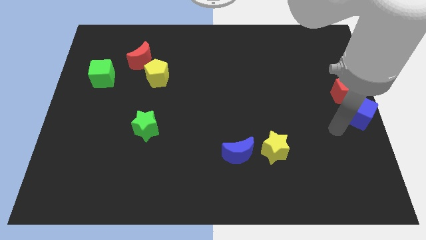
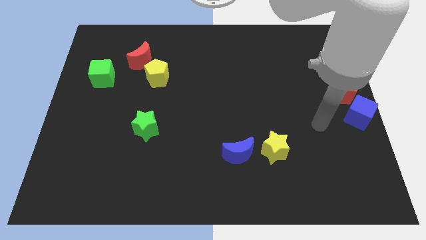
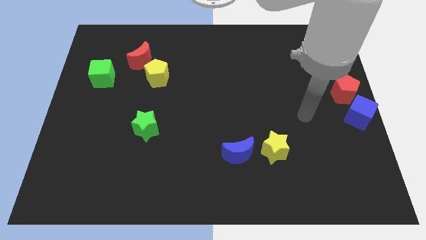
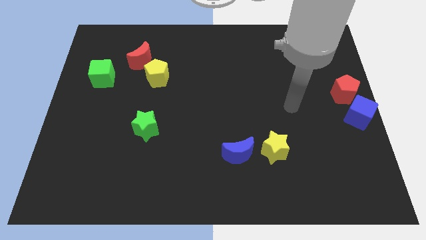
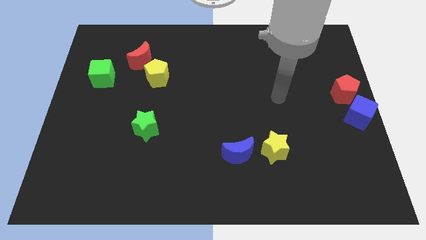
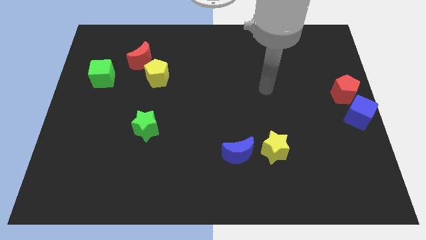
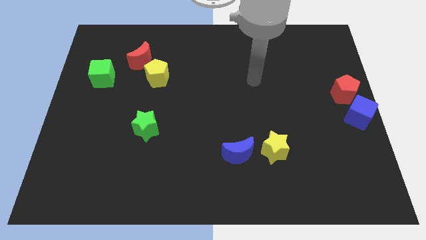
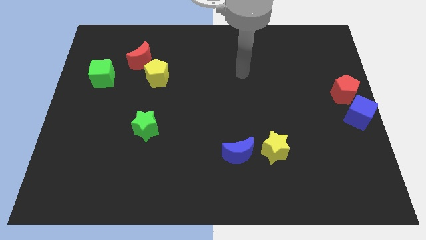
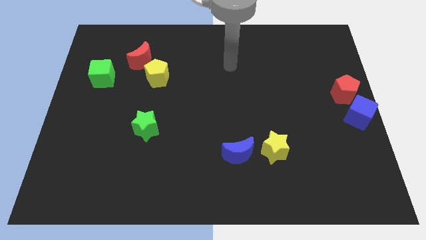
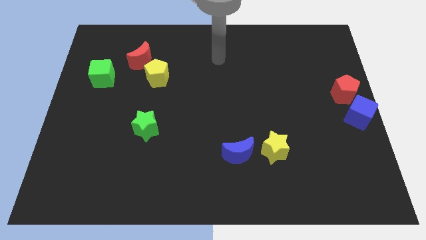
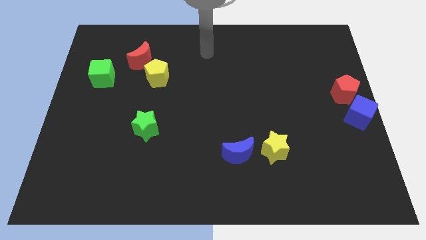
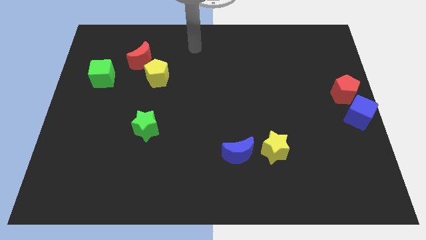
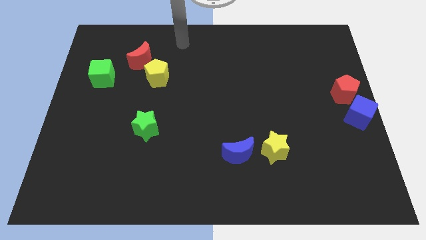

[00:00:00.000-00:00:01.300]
move your arm away from blue cube

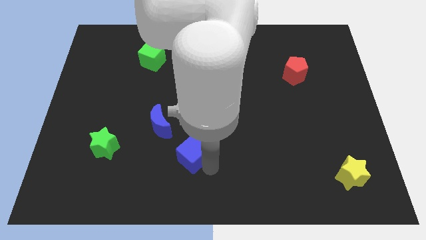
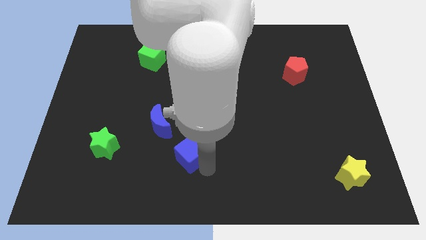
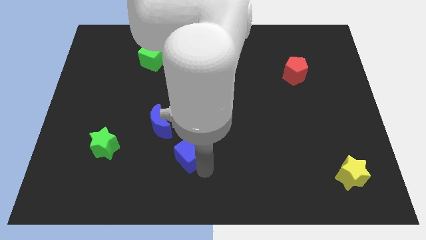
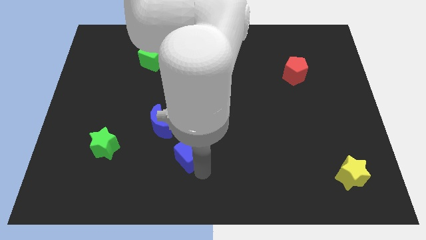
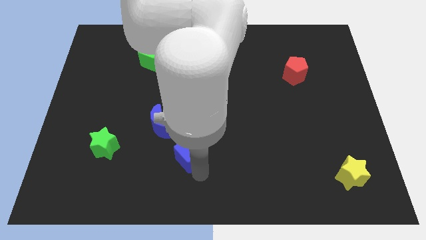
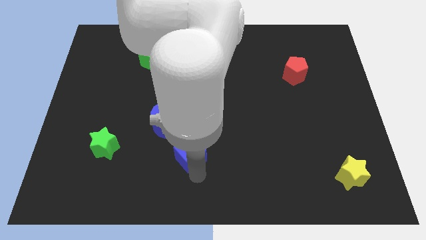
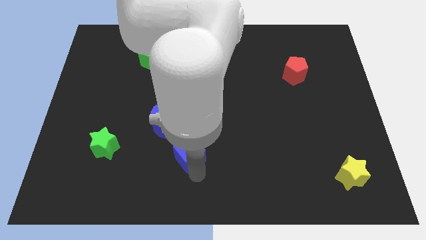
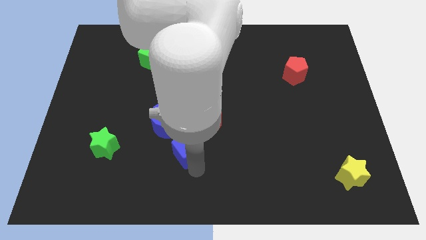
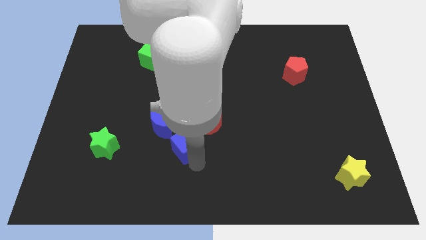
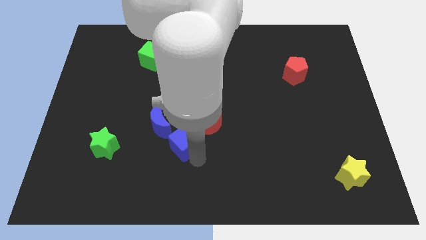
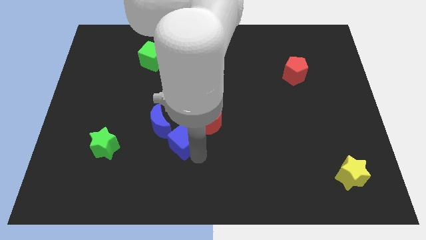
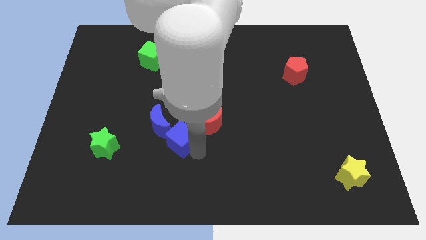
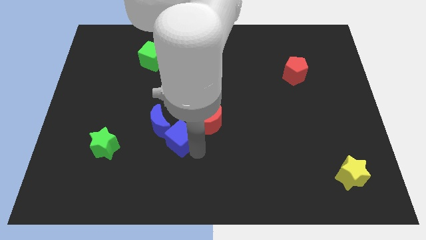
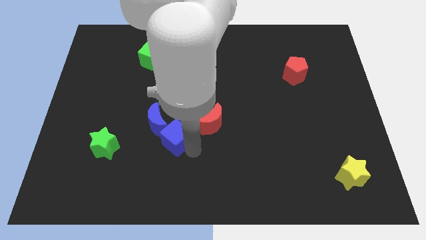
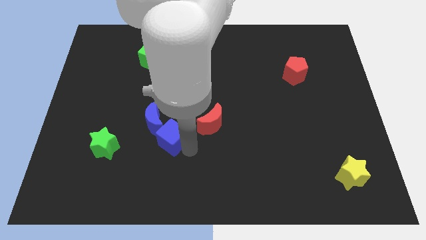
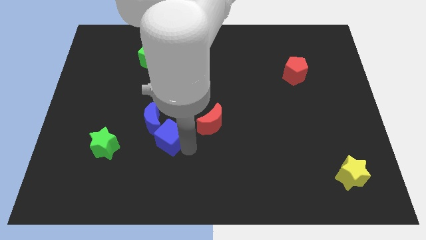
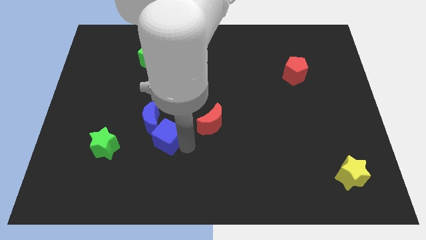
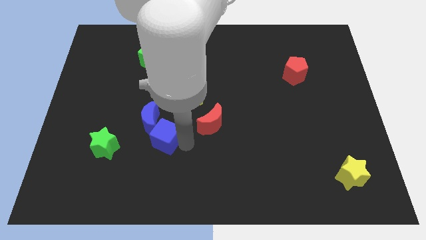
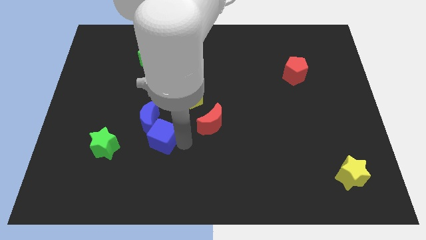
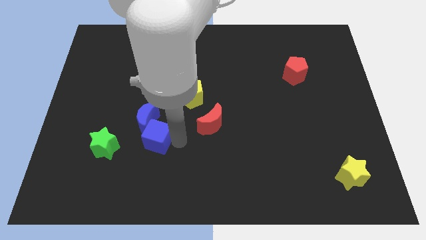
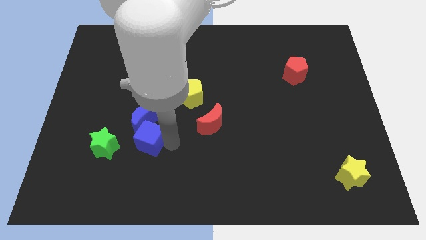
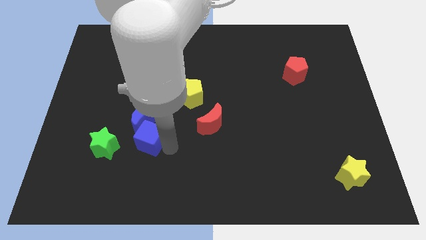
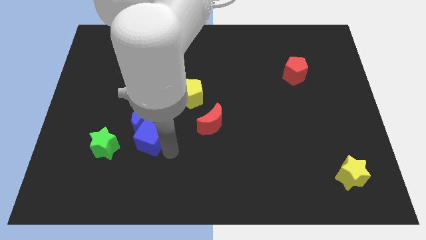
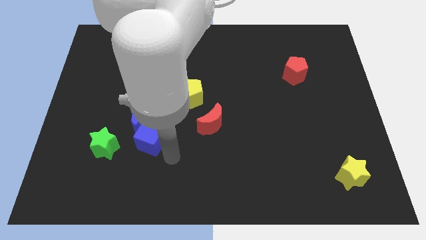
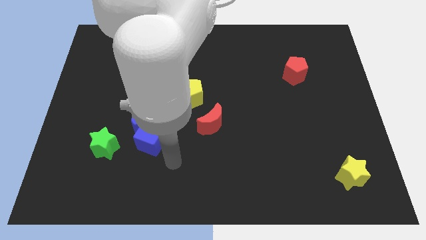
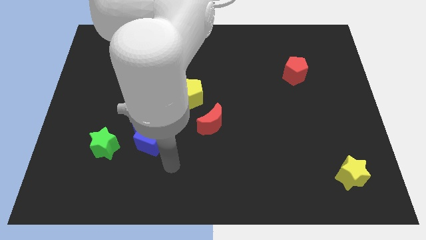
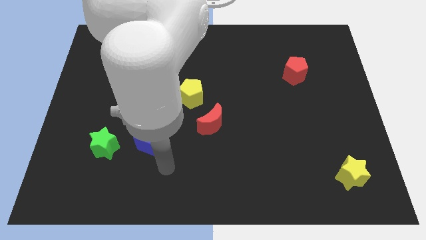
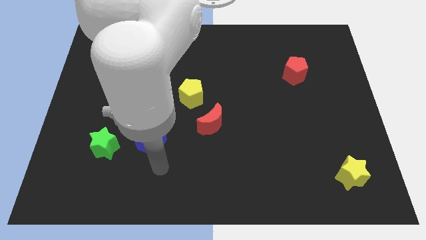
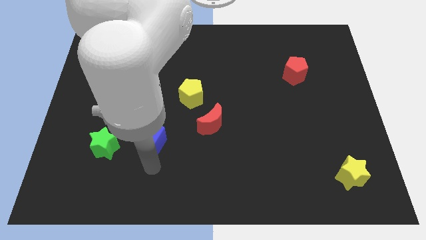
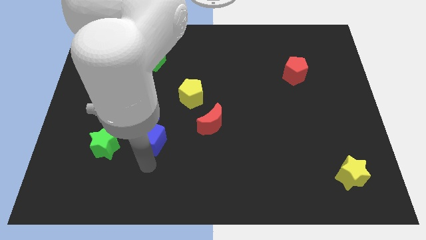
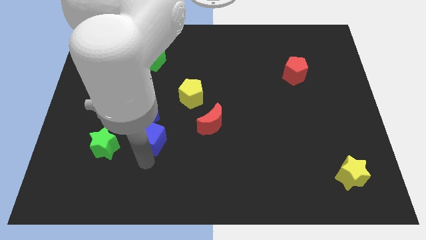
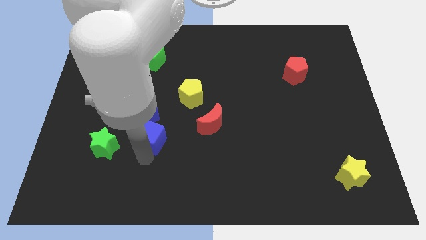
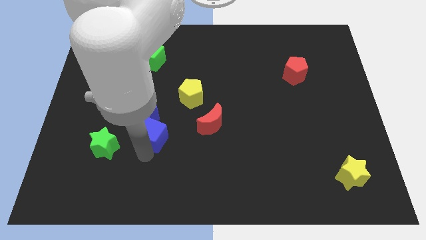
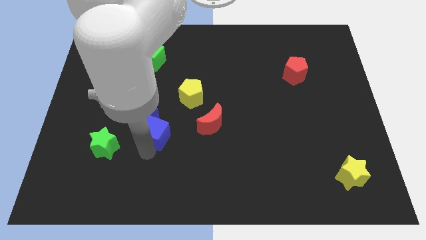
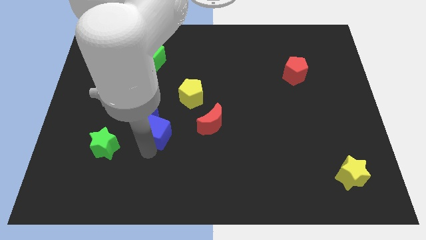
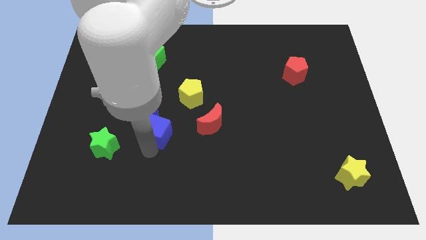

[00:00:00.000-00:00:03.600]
push the blue cube into the blue moon

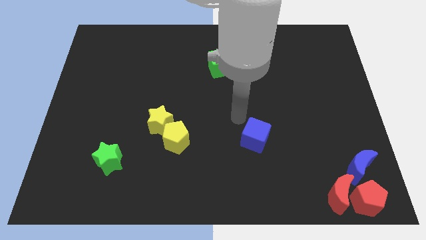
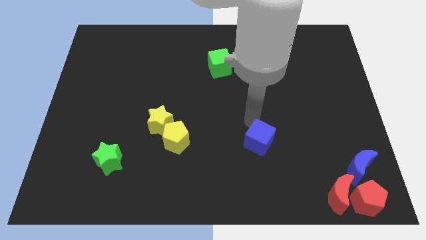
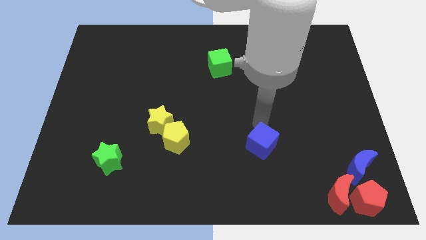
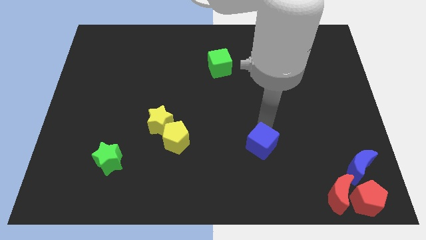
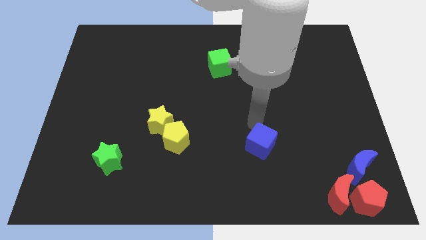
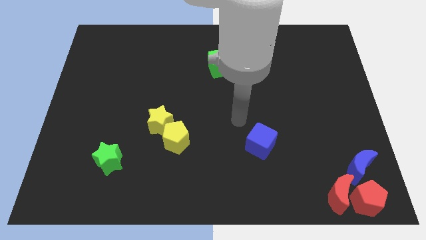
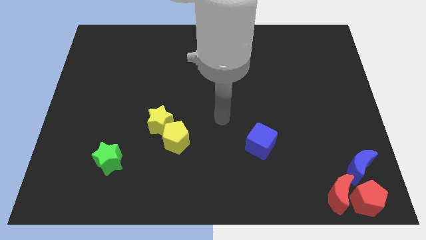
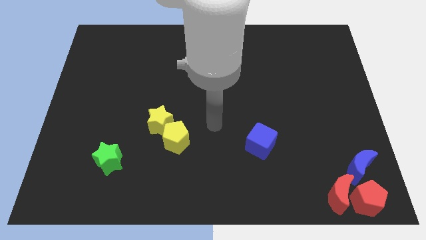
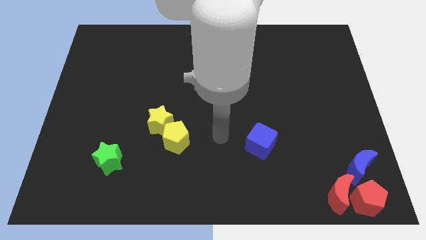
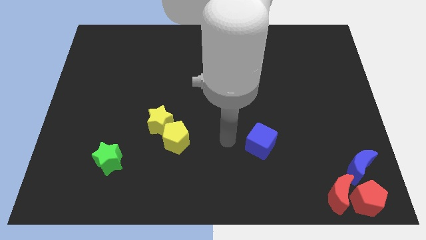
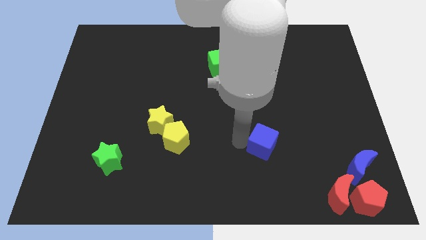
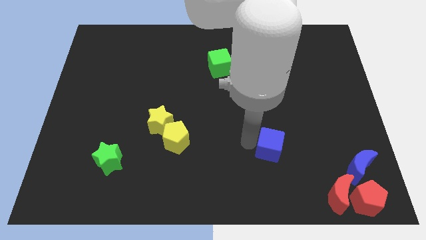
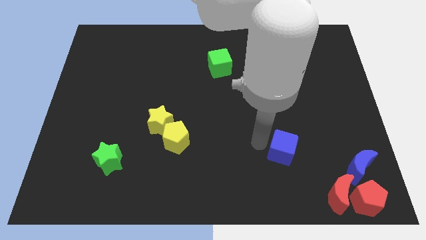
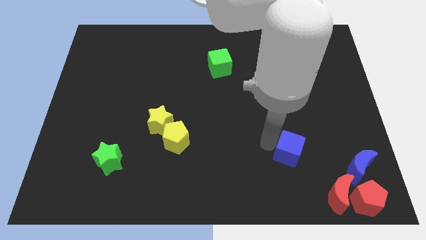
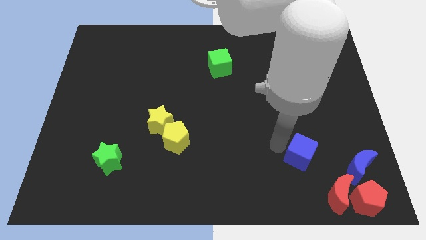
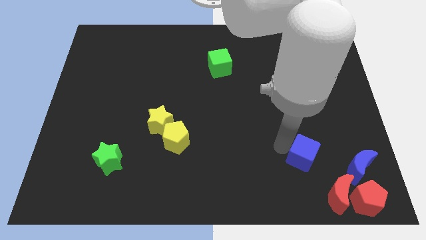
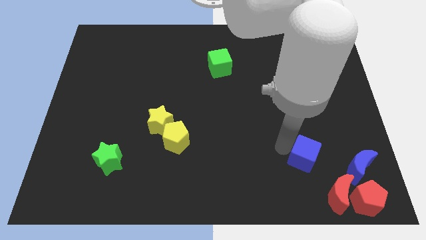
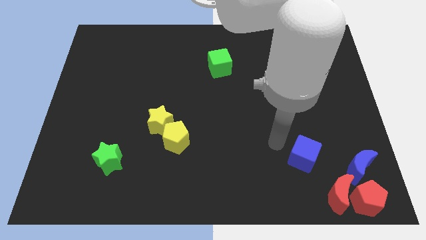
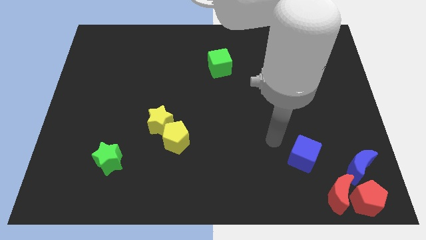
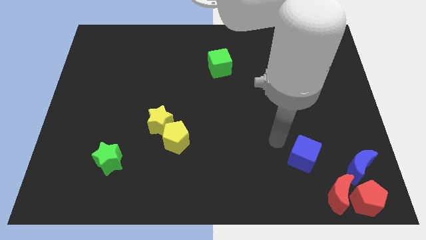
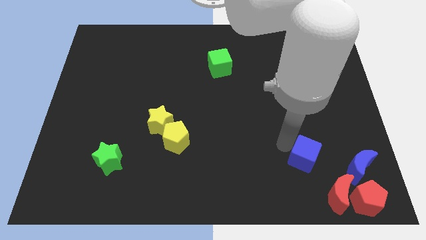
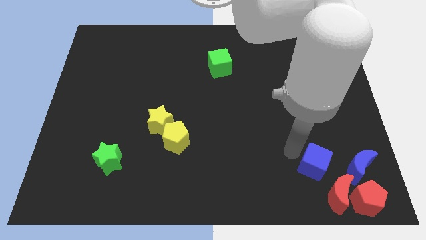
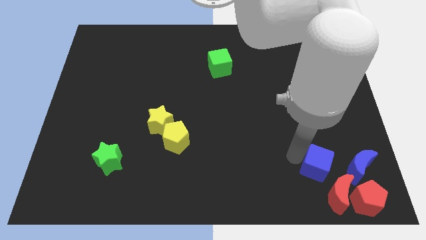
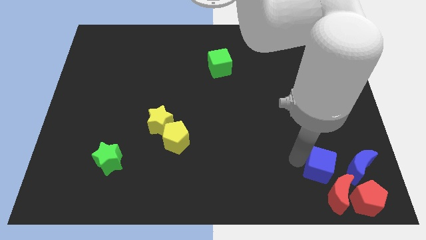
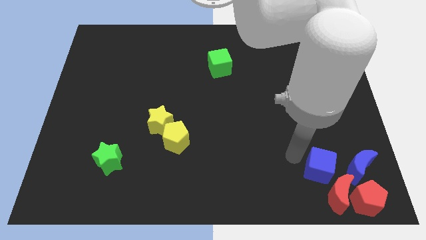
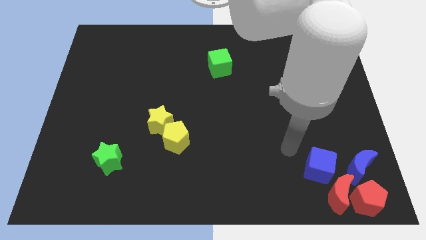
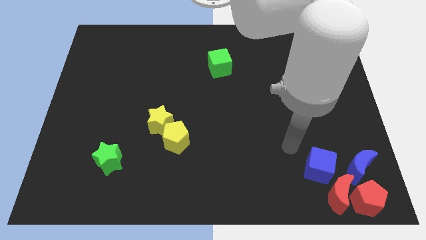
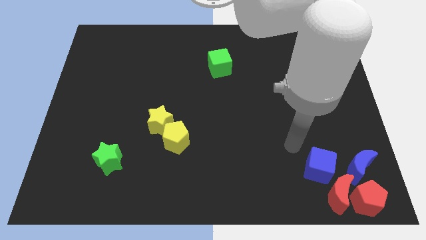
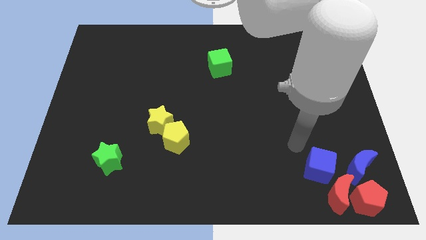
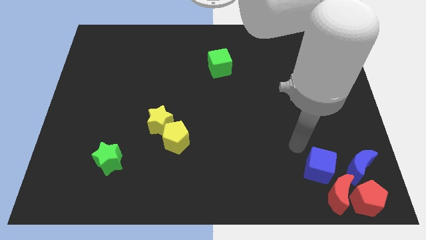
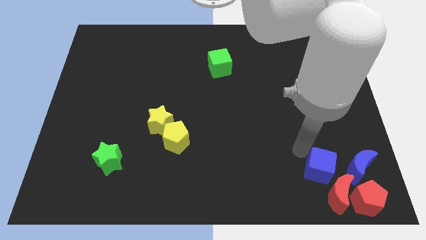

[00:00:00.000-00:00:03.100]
place the blue cube horizontal to the blue moon on the left side

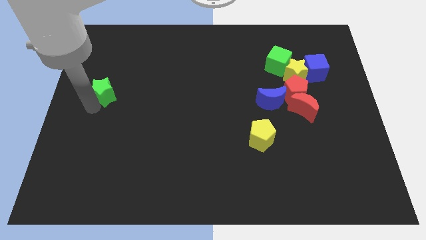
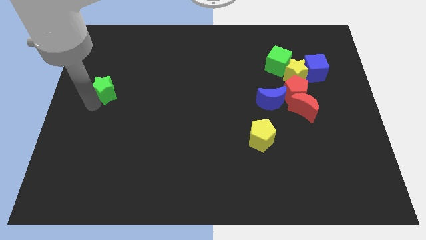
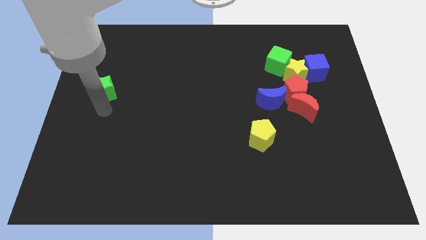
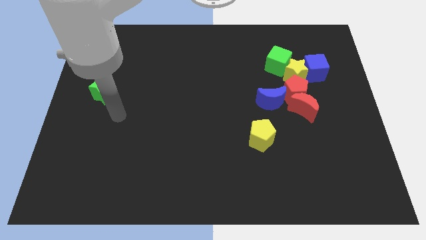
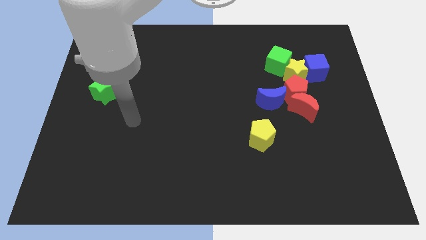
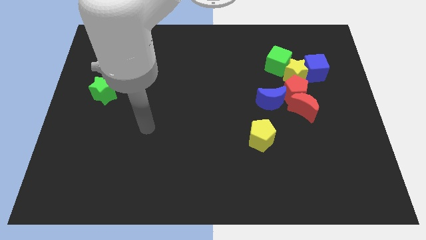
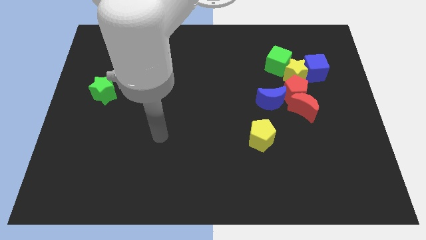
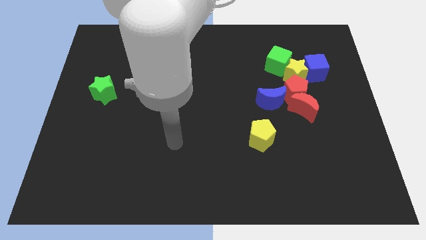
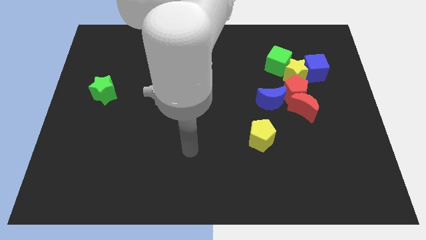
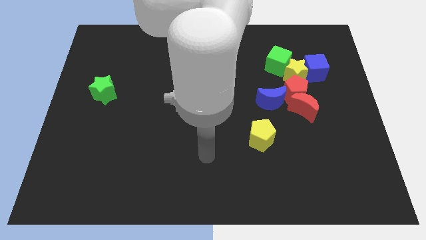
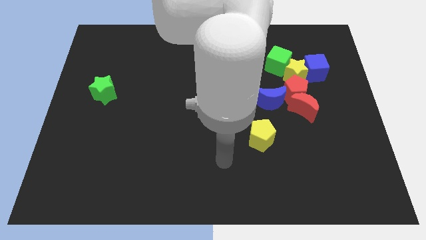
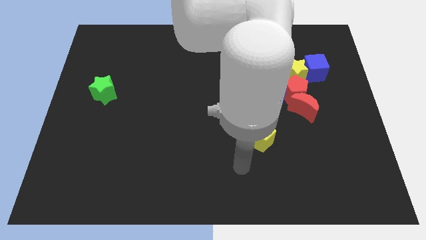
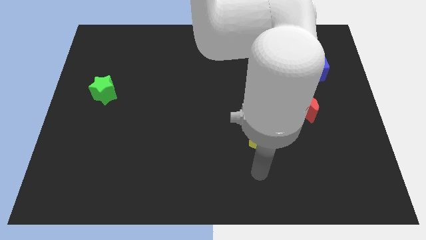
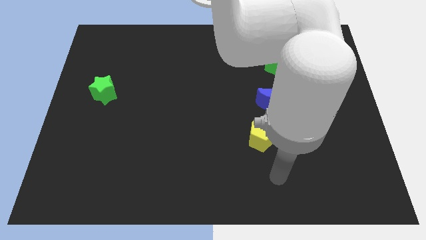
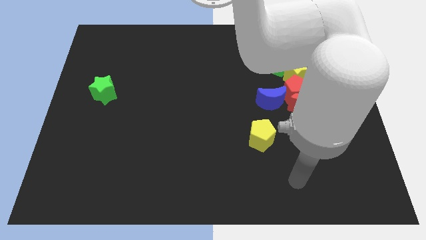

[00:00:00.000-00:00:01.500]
move your arm away from the green star
